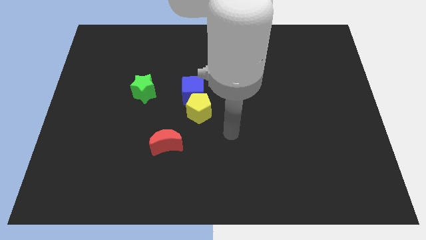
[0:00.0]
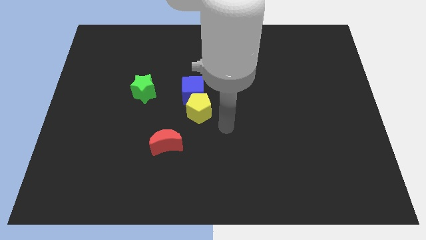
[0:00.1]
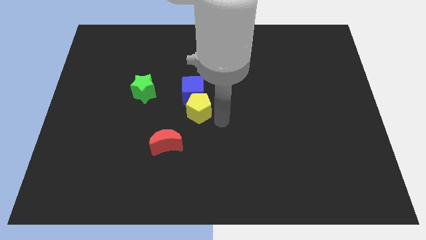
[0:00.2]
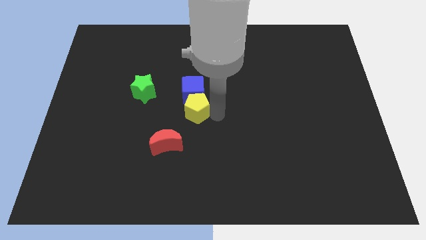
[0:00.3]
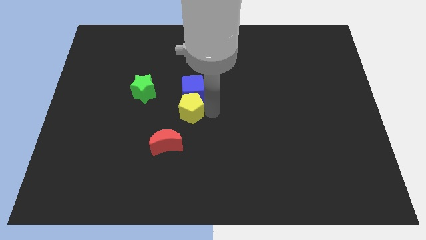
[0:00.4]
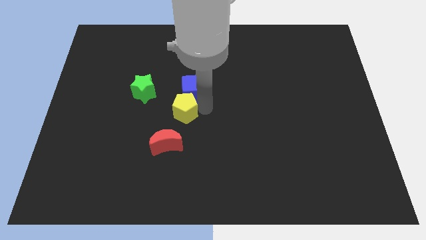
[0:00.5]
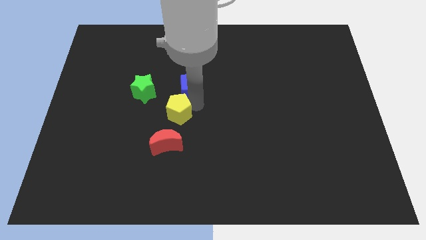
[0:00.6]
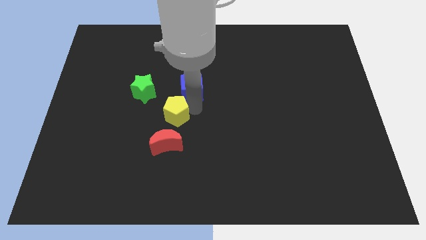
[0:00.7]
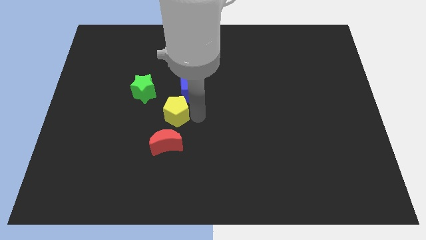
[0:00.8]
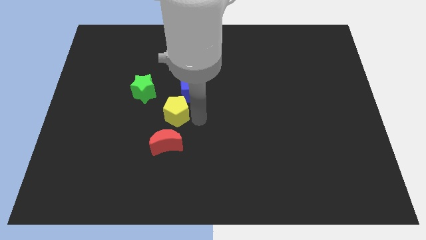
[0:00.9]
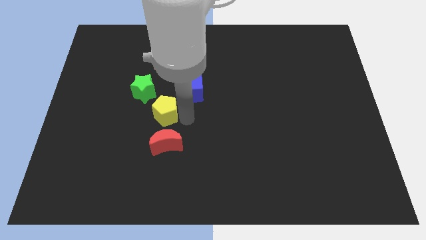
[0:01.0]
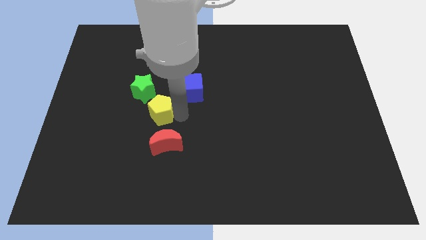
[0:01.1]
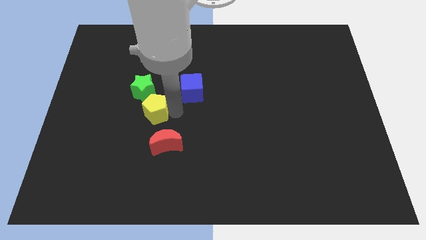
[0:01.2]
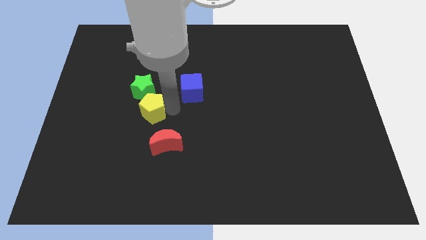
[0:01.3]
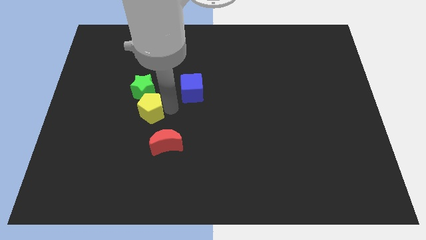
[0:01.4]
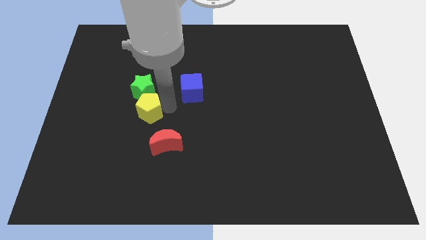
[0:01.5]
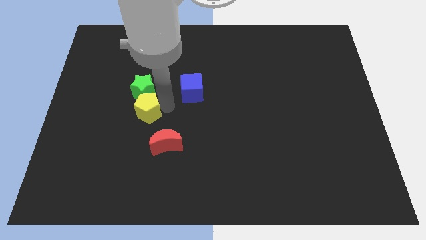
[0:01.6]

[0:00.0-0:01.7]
move the yellow block towards the green block

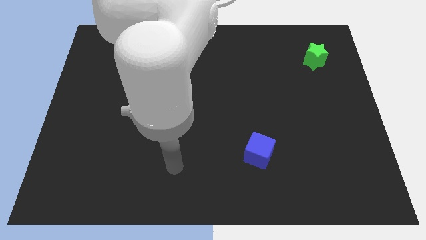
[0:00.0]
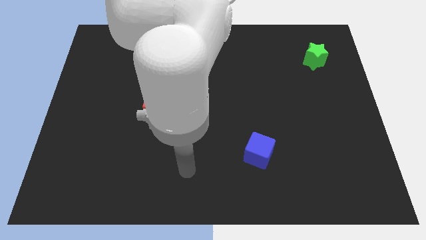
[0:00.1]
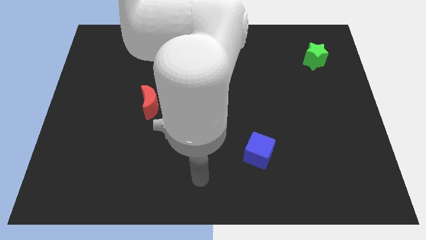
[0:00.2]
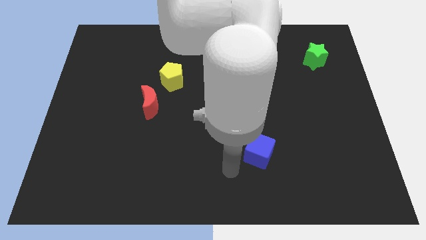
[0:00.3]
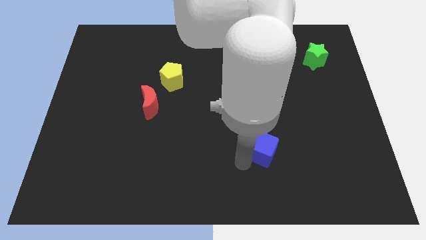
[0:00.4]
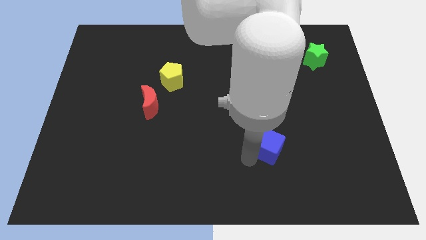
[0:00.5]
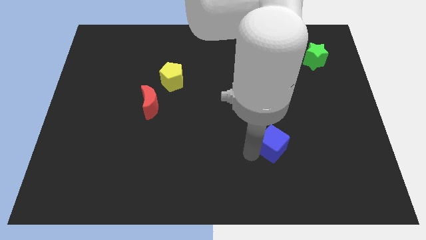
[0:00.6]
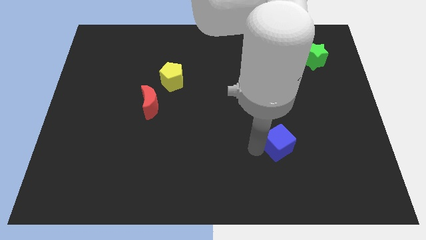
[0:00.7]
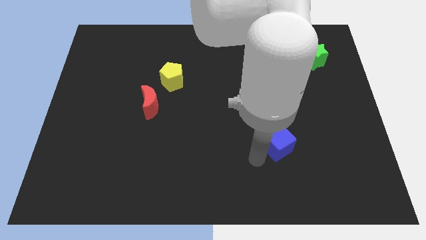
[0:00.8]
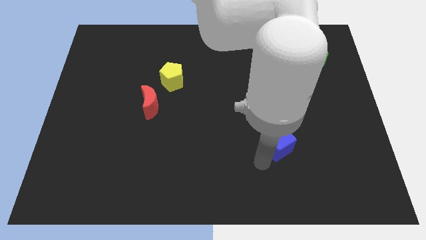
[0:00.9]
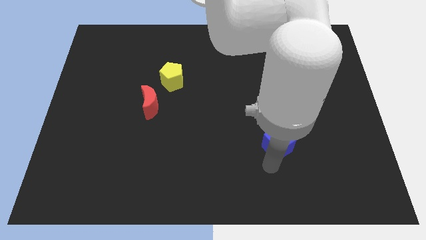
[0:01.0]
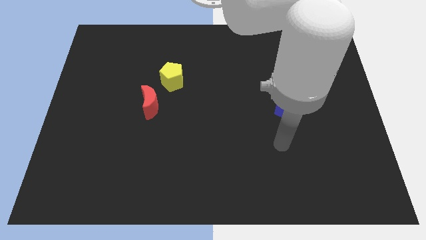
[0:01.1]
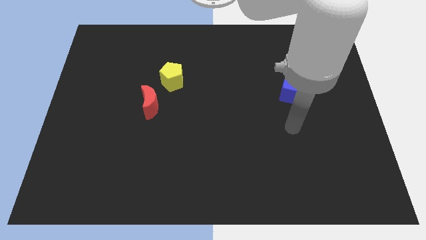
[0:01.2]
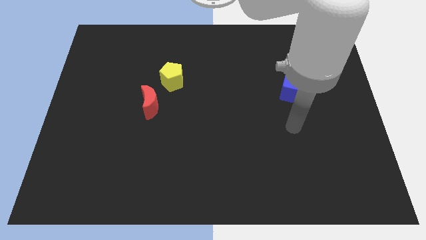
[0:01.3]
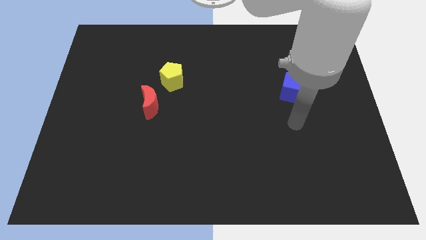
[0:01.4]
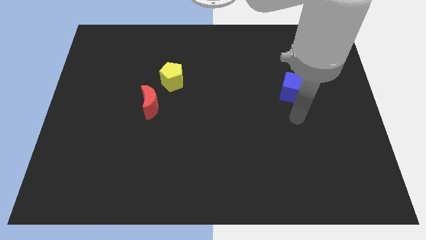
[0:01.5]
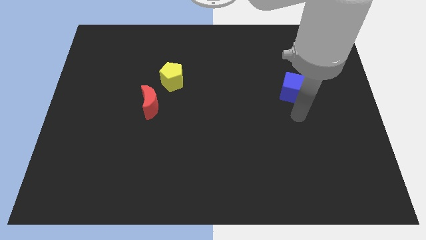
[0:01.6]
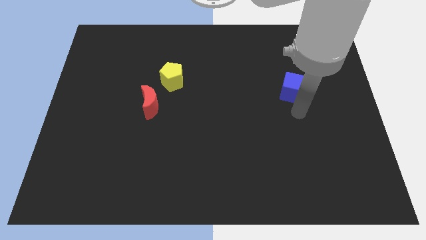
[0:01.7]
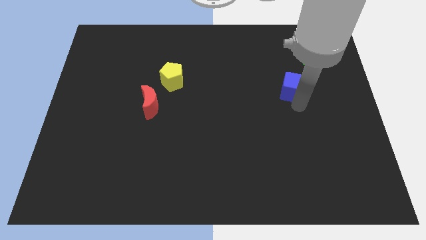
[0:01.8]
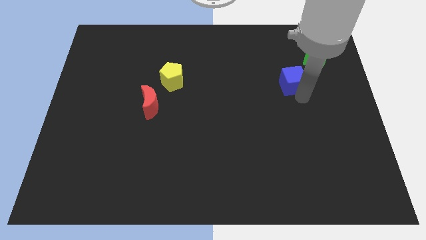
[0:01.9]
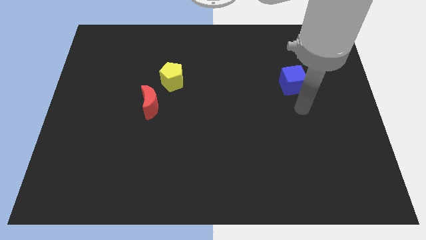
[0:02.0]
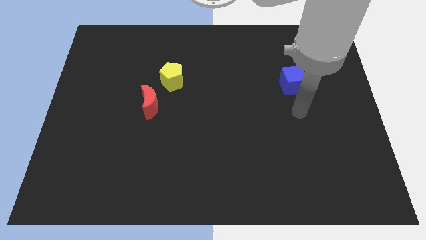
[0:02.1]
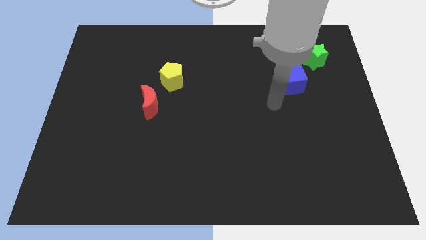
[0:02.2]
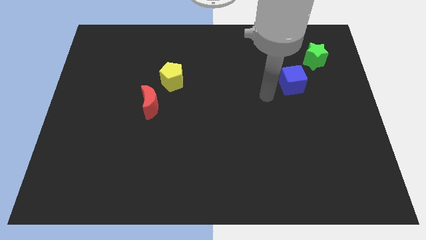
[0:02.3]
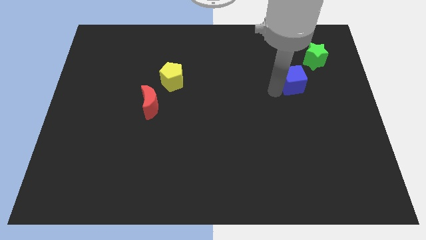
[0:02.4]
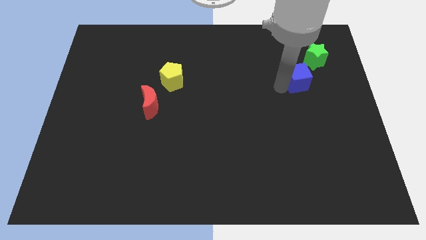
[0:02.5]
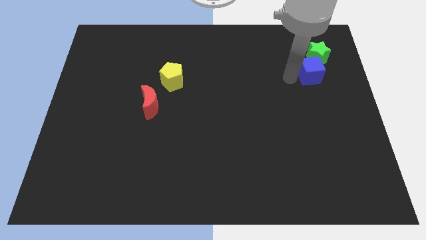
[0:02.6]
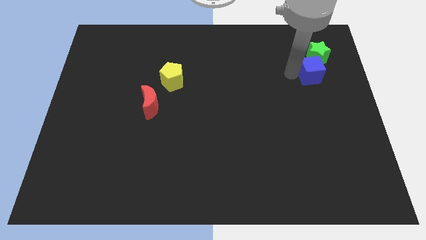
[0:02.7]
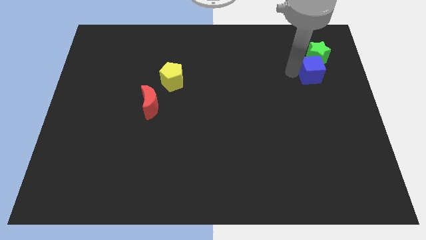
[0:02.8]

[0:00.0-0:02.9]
slide the blue block towards the green star

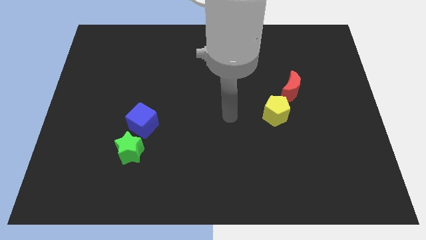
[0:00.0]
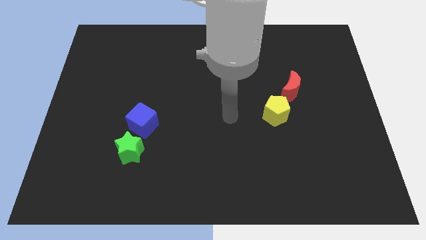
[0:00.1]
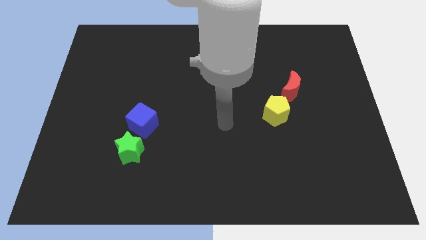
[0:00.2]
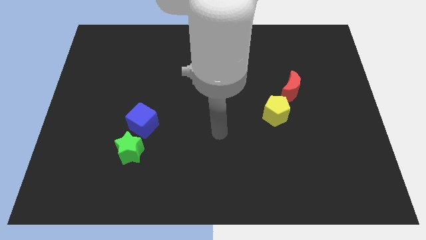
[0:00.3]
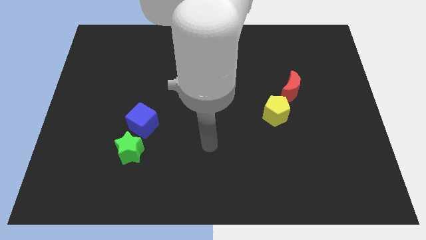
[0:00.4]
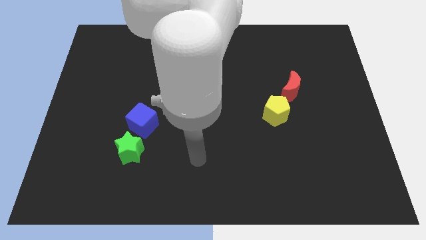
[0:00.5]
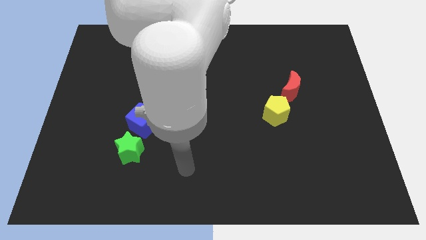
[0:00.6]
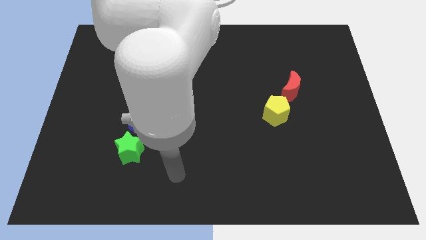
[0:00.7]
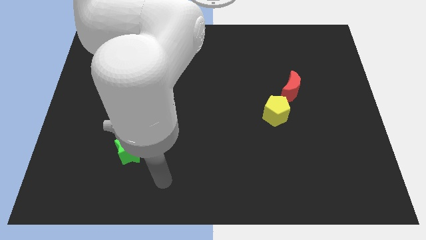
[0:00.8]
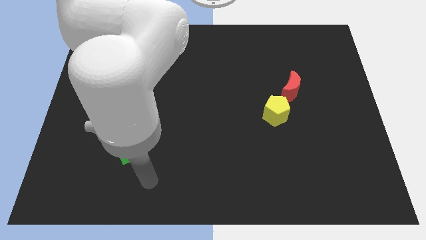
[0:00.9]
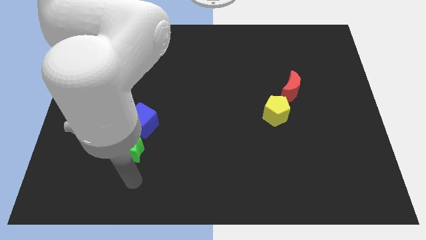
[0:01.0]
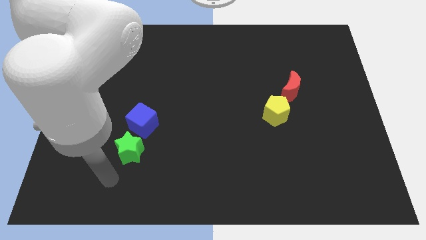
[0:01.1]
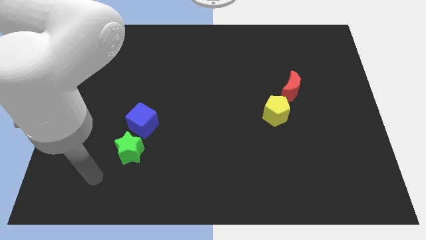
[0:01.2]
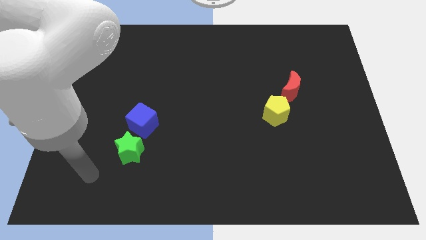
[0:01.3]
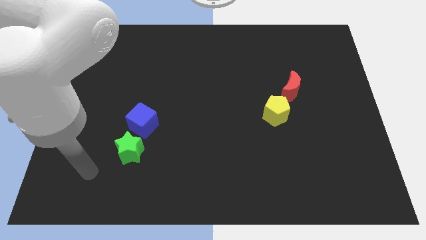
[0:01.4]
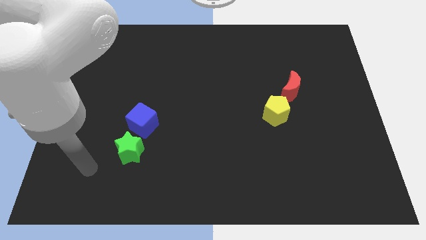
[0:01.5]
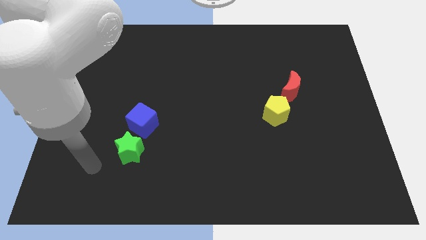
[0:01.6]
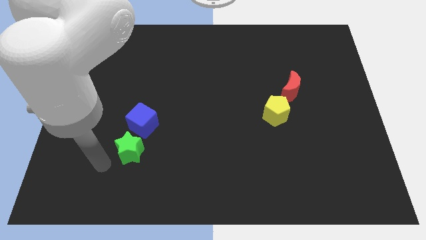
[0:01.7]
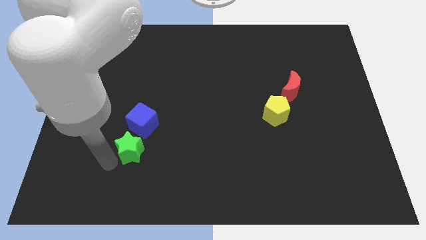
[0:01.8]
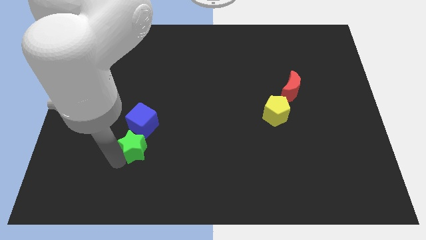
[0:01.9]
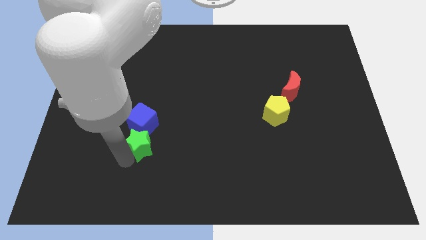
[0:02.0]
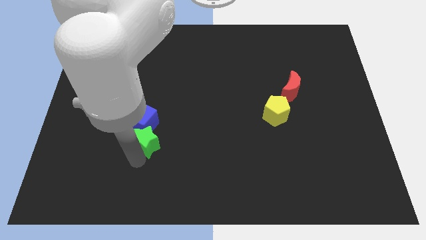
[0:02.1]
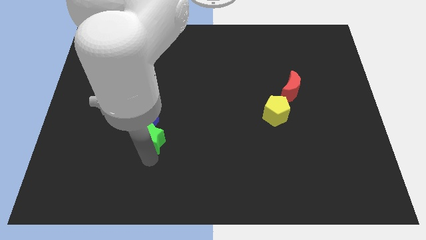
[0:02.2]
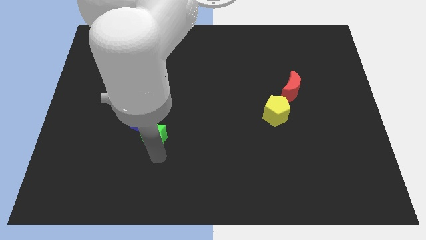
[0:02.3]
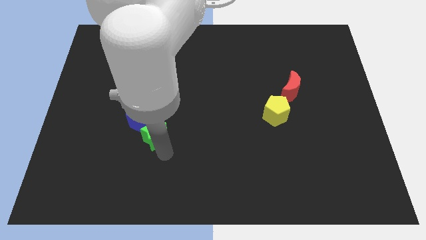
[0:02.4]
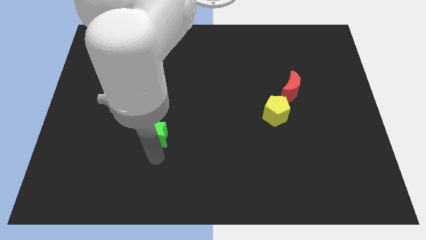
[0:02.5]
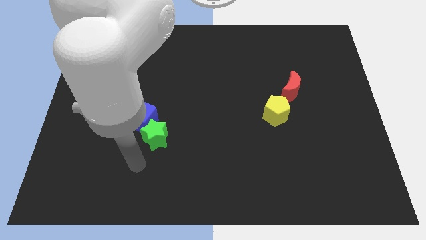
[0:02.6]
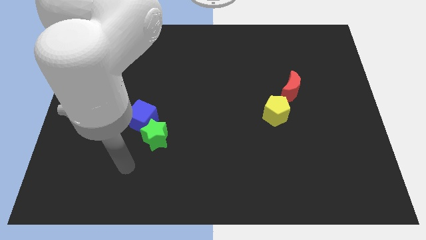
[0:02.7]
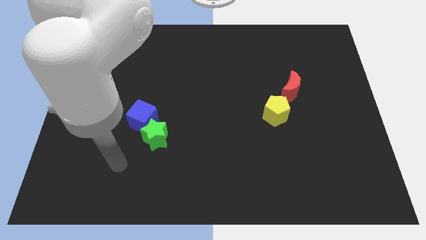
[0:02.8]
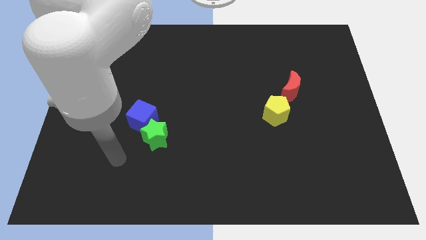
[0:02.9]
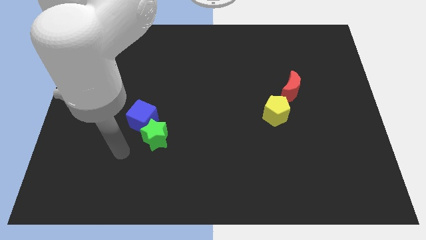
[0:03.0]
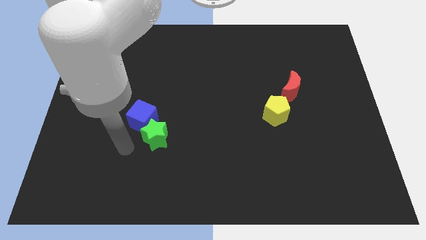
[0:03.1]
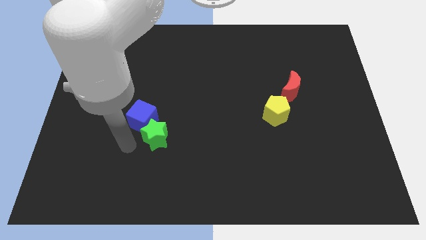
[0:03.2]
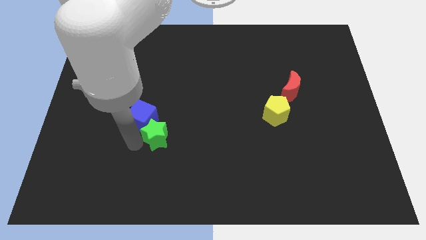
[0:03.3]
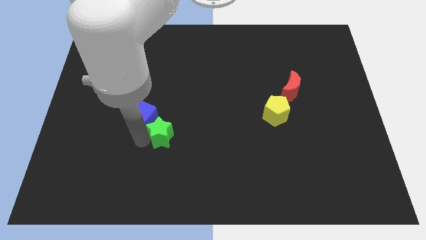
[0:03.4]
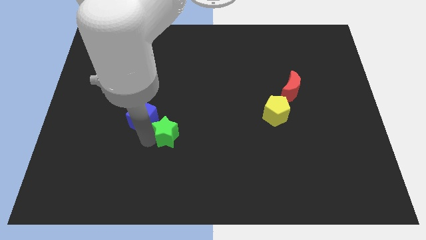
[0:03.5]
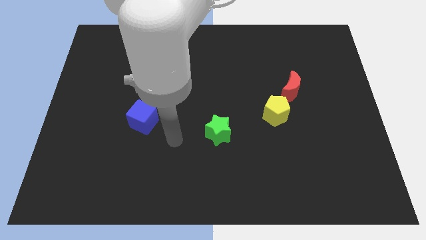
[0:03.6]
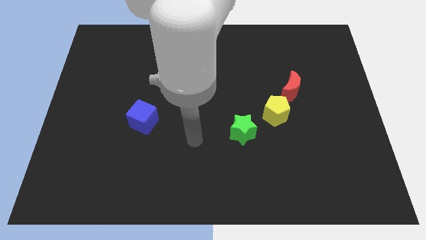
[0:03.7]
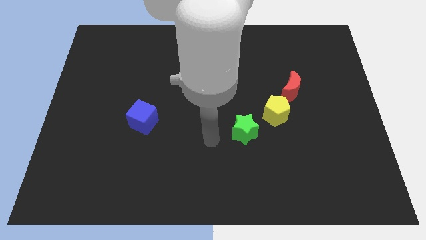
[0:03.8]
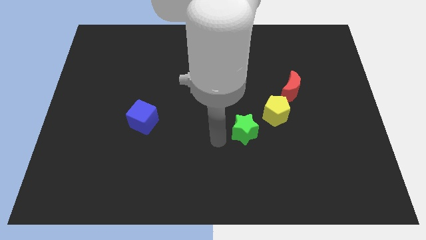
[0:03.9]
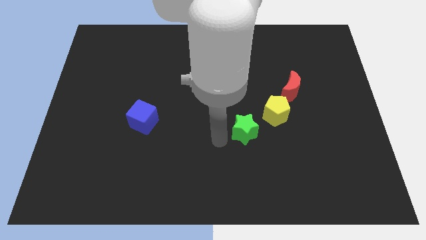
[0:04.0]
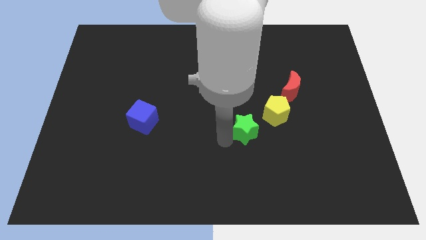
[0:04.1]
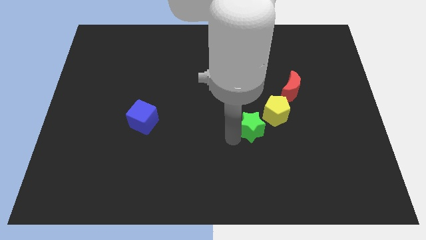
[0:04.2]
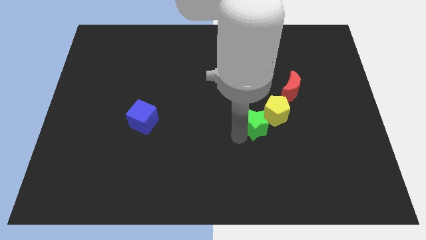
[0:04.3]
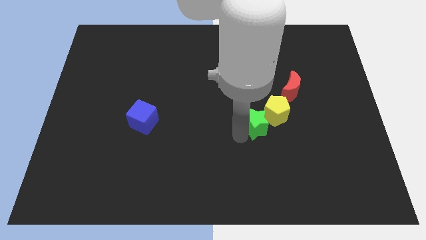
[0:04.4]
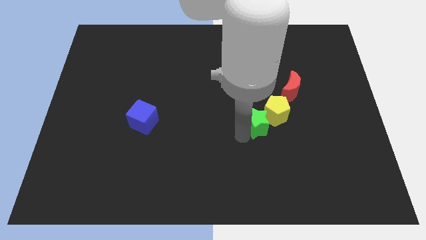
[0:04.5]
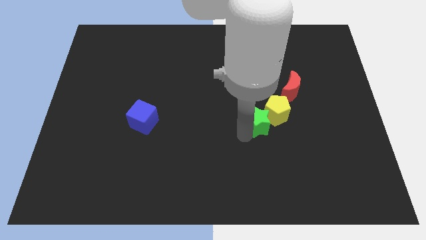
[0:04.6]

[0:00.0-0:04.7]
move the star to the pentagon
